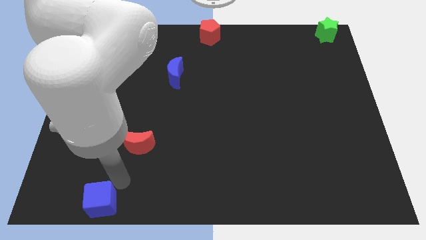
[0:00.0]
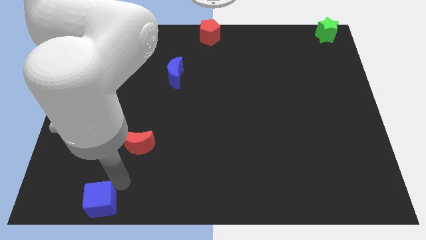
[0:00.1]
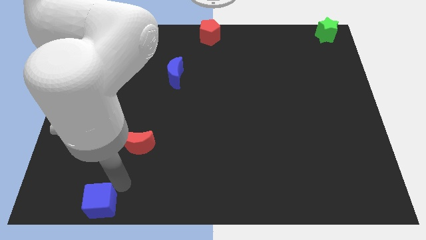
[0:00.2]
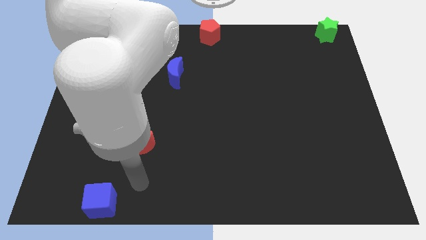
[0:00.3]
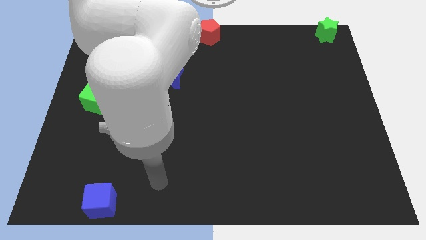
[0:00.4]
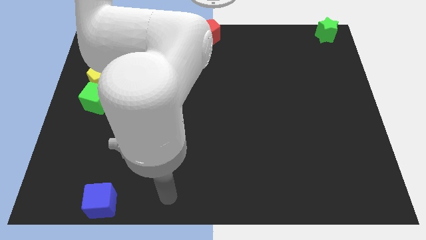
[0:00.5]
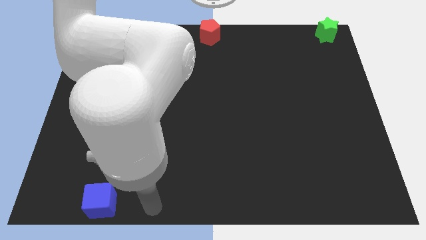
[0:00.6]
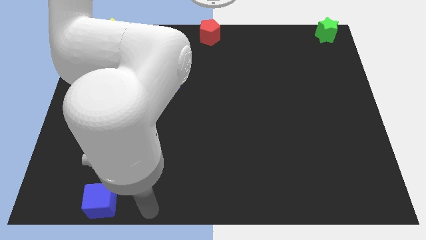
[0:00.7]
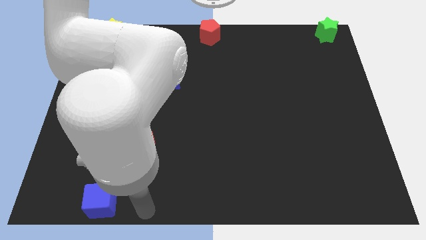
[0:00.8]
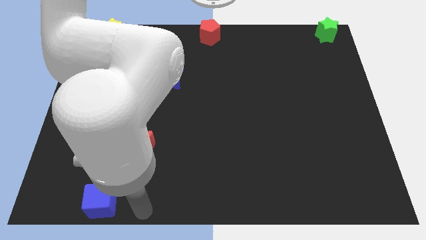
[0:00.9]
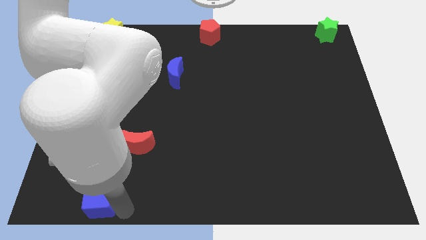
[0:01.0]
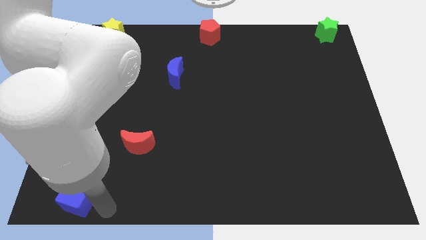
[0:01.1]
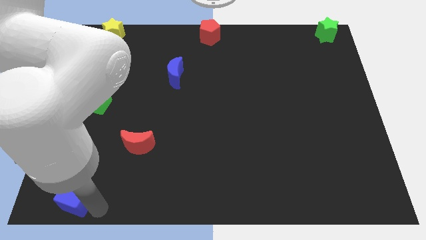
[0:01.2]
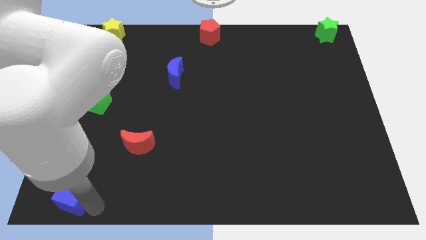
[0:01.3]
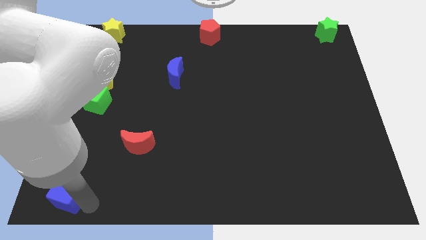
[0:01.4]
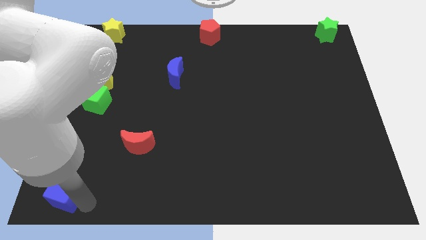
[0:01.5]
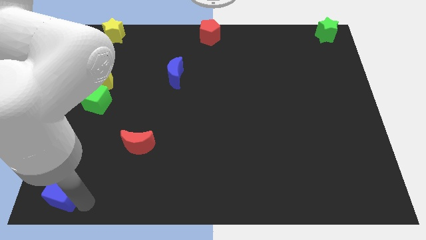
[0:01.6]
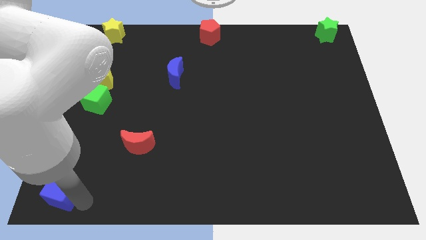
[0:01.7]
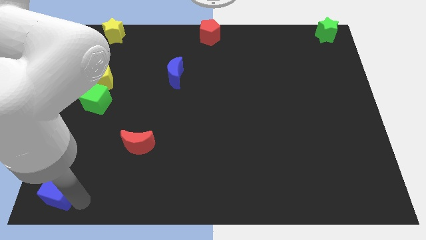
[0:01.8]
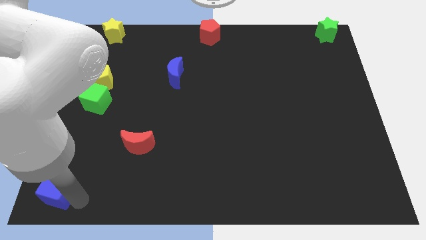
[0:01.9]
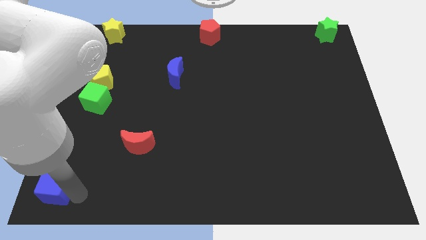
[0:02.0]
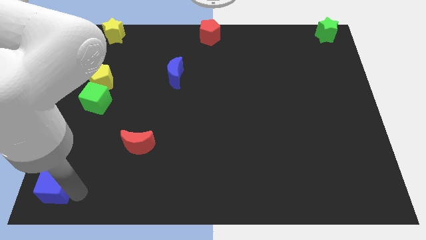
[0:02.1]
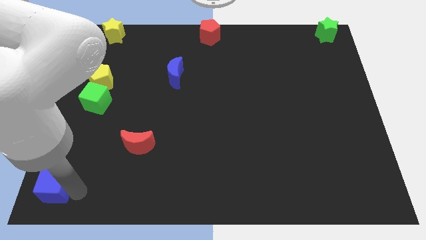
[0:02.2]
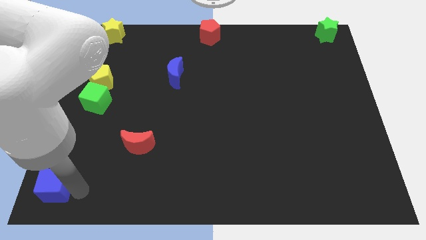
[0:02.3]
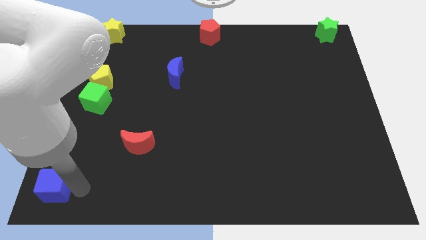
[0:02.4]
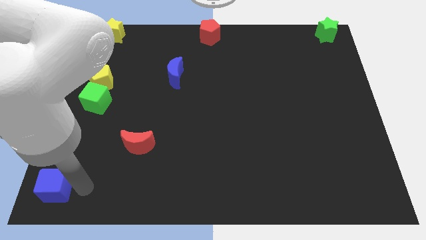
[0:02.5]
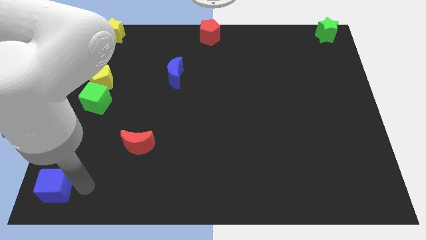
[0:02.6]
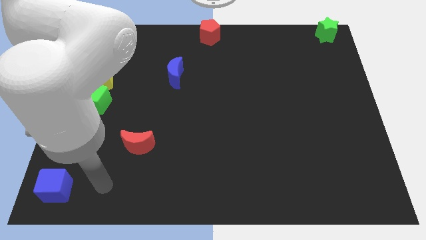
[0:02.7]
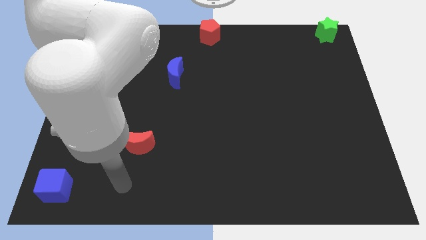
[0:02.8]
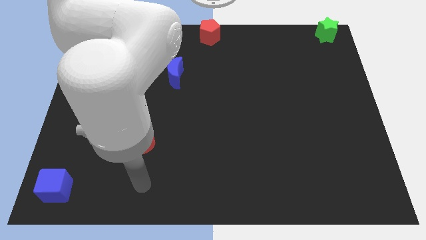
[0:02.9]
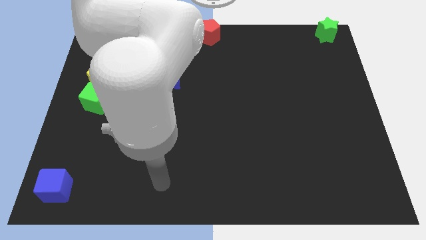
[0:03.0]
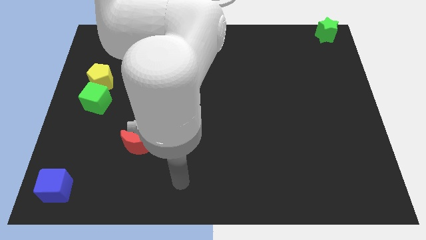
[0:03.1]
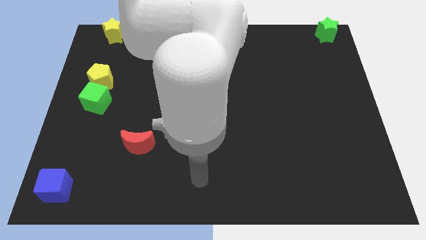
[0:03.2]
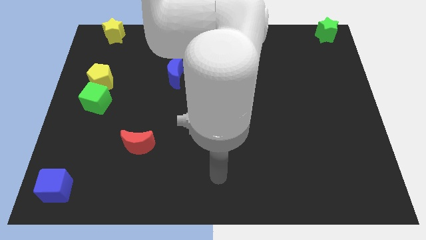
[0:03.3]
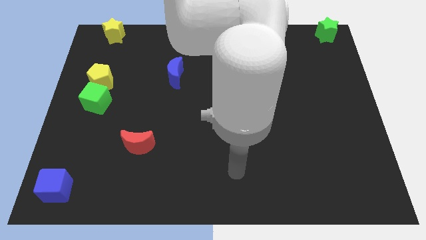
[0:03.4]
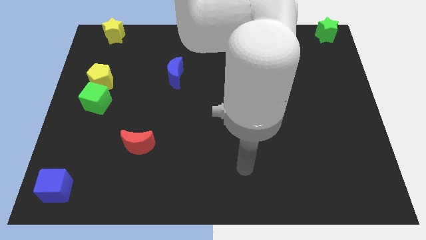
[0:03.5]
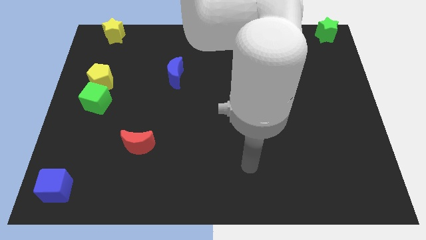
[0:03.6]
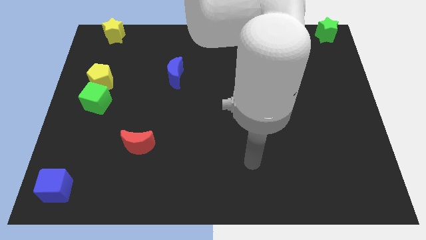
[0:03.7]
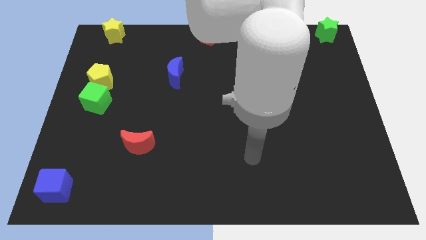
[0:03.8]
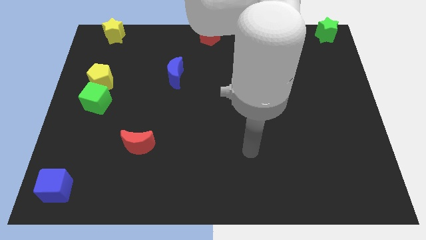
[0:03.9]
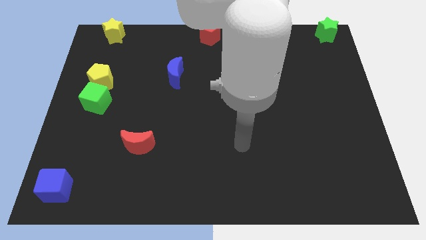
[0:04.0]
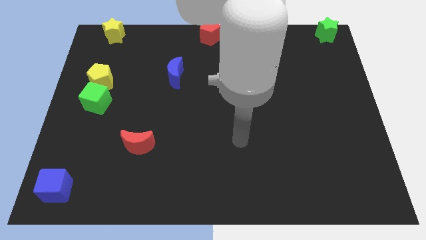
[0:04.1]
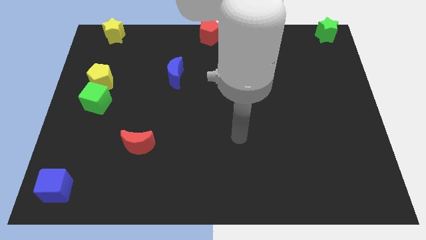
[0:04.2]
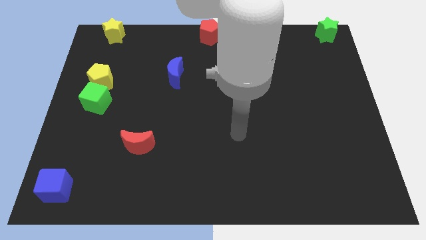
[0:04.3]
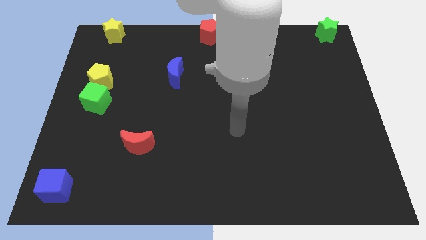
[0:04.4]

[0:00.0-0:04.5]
push the blue cube to the left

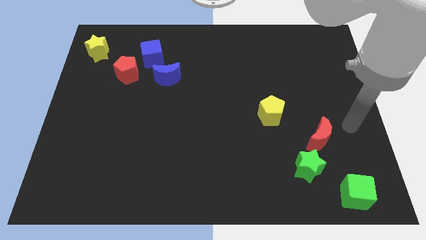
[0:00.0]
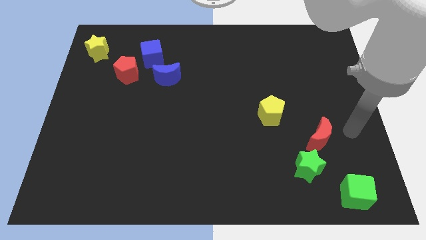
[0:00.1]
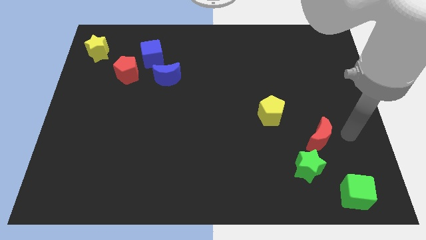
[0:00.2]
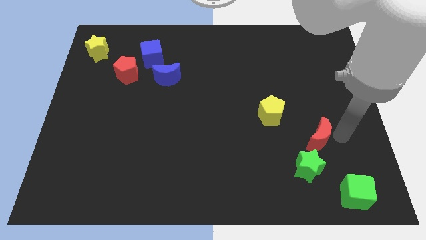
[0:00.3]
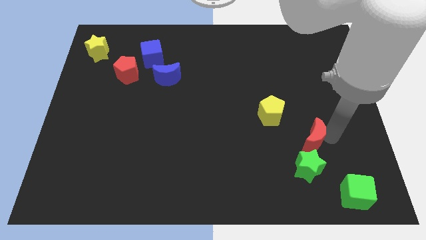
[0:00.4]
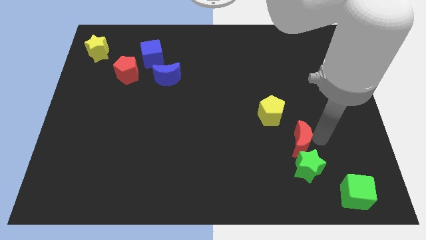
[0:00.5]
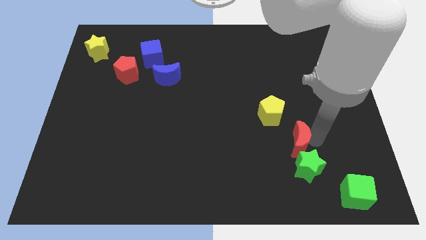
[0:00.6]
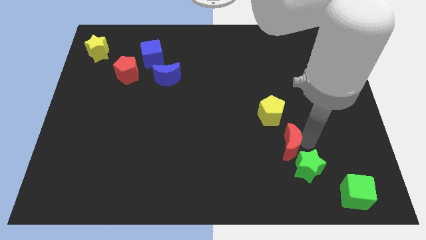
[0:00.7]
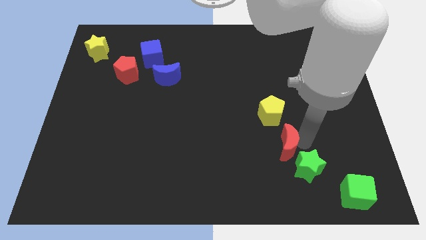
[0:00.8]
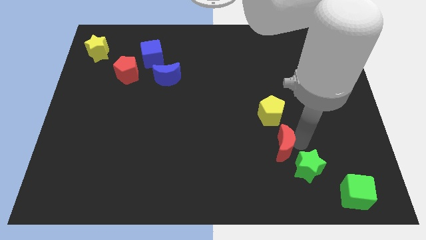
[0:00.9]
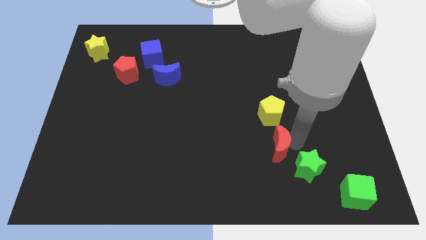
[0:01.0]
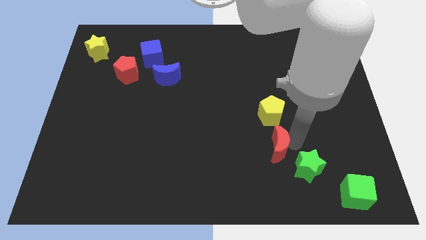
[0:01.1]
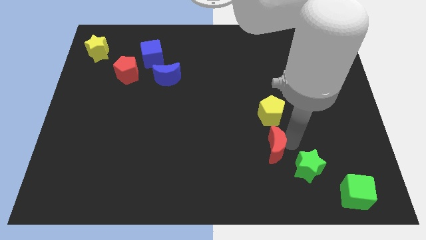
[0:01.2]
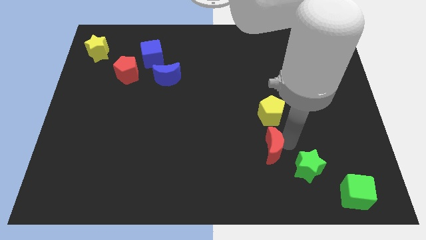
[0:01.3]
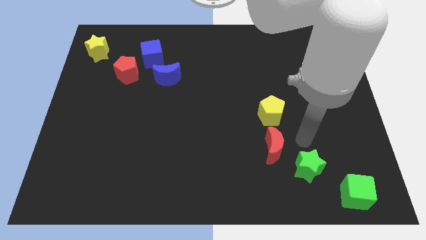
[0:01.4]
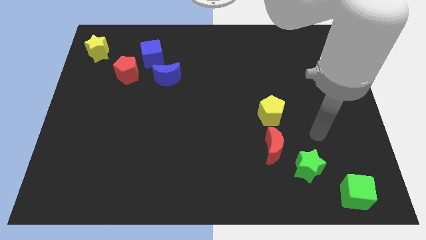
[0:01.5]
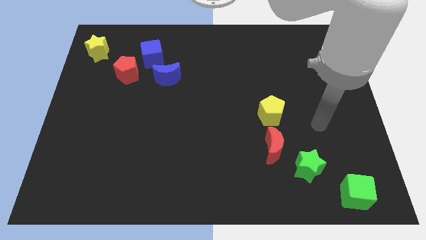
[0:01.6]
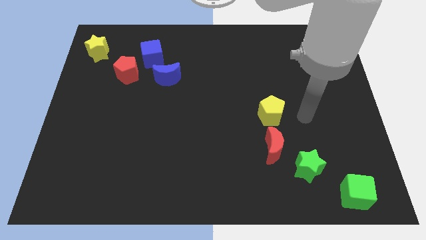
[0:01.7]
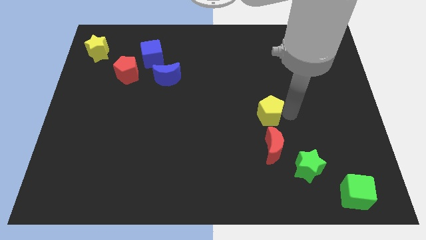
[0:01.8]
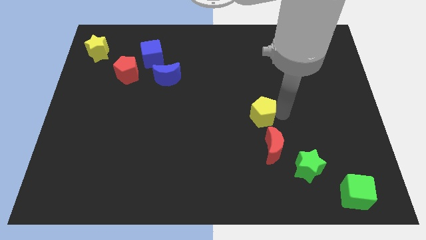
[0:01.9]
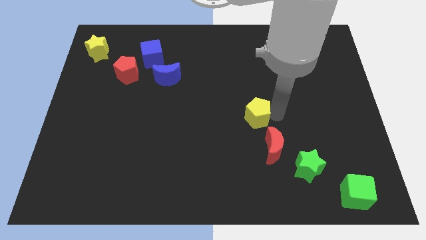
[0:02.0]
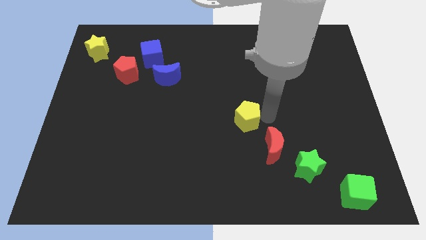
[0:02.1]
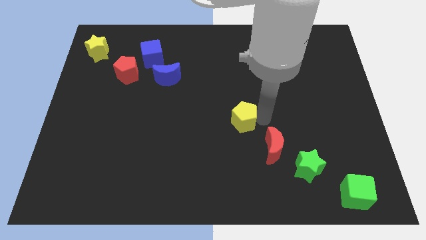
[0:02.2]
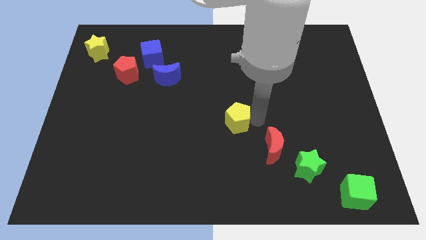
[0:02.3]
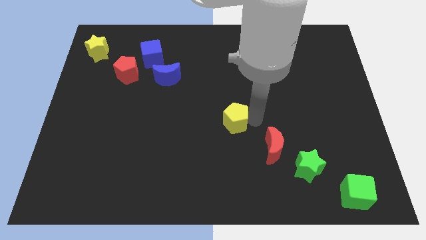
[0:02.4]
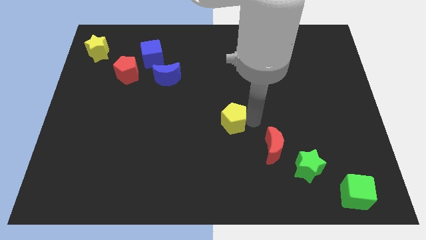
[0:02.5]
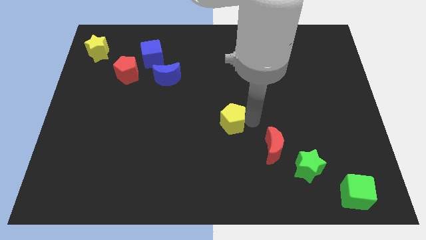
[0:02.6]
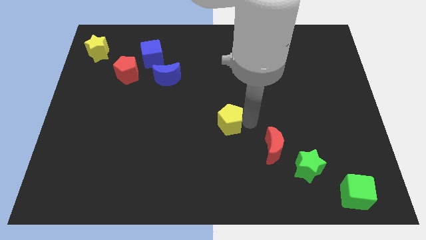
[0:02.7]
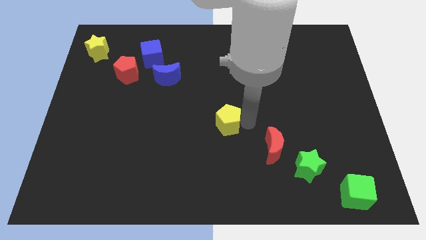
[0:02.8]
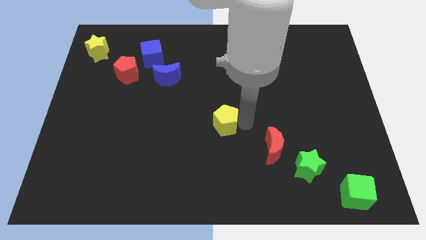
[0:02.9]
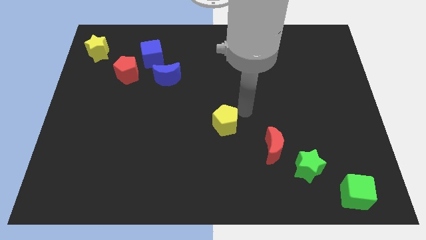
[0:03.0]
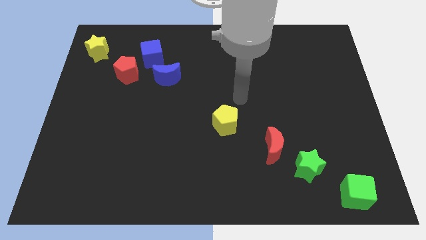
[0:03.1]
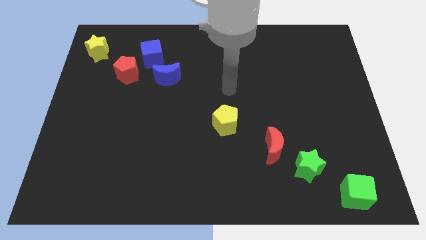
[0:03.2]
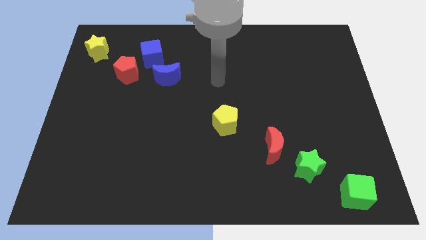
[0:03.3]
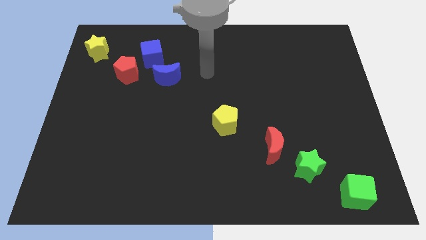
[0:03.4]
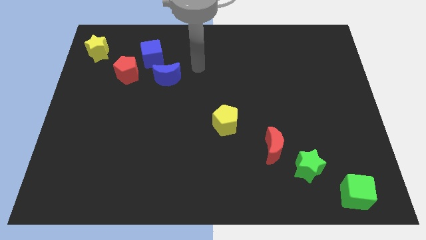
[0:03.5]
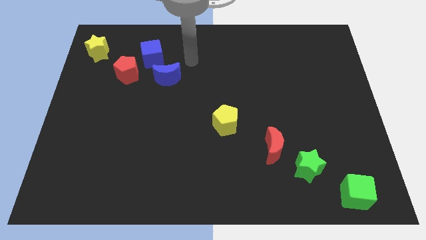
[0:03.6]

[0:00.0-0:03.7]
arrange the blocks properly to form a line

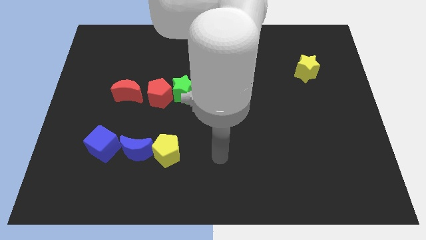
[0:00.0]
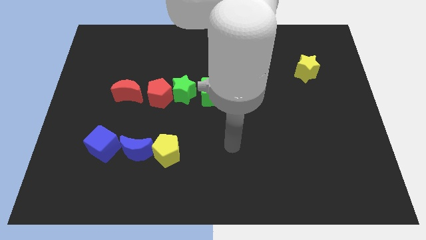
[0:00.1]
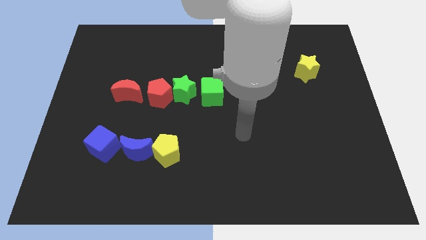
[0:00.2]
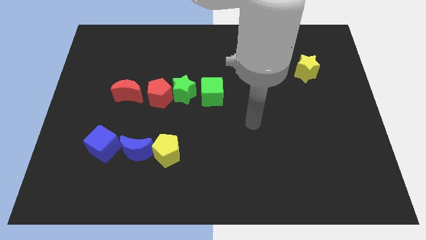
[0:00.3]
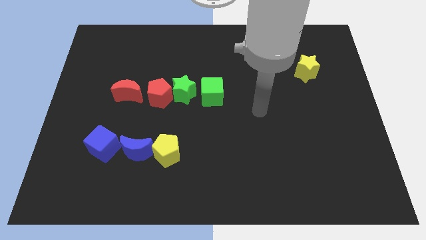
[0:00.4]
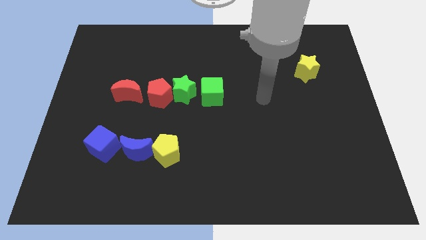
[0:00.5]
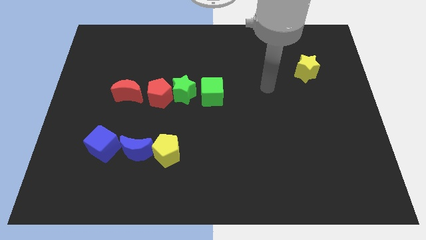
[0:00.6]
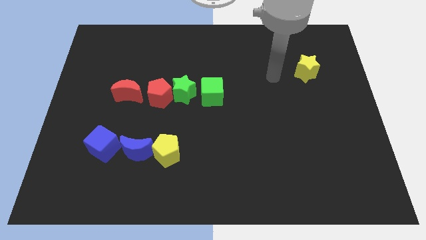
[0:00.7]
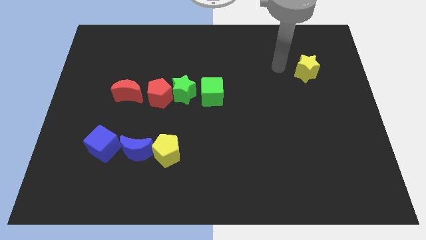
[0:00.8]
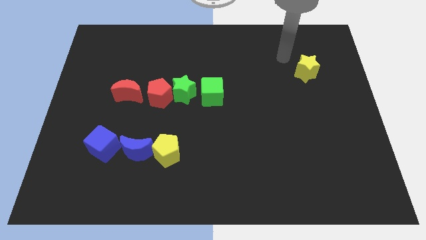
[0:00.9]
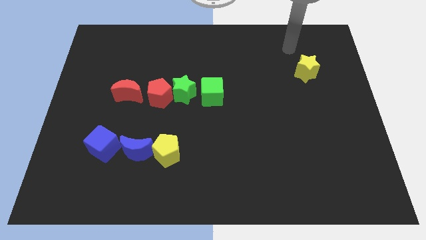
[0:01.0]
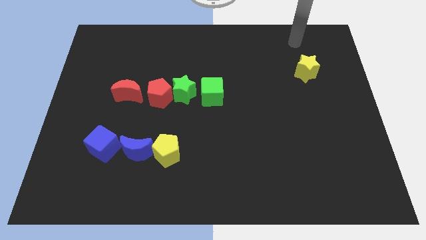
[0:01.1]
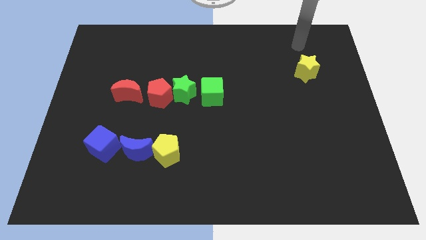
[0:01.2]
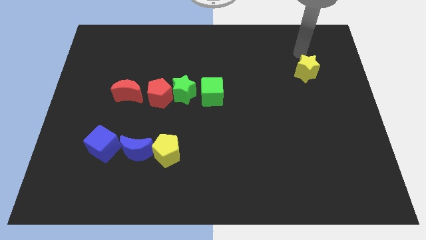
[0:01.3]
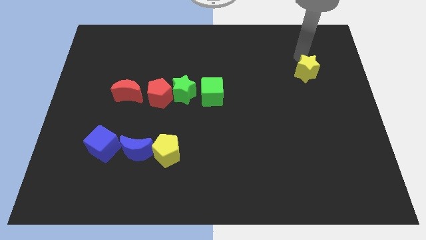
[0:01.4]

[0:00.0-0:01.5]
move your arm close to the yellow star
